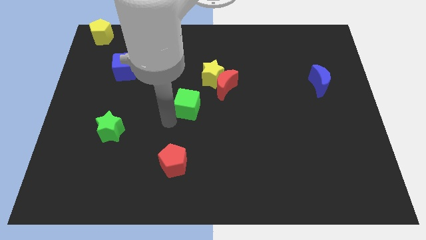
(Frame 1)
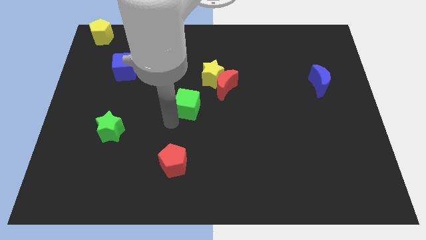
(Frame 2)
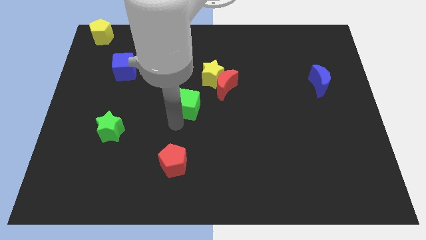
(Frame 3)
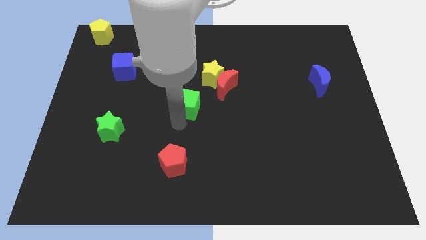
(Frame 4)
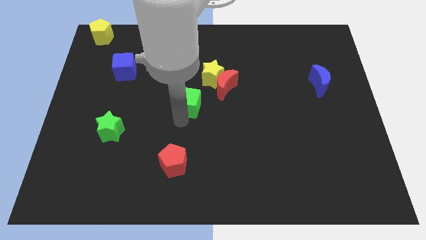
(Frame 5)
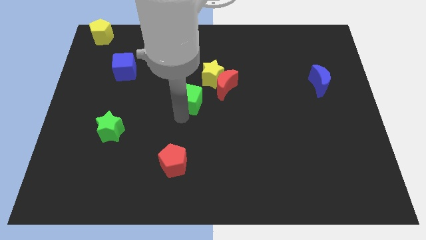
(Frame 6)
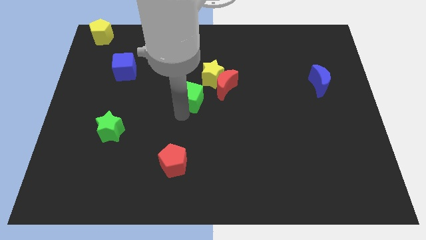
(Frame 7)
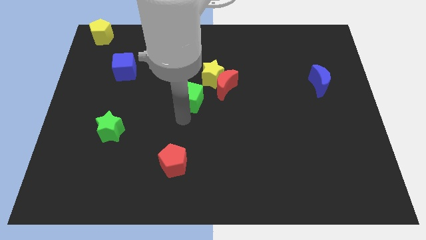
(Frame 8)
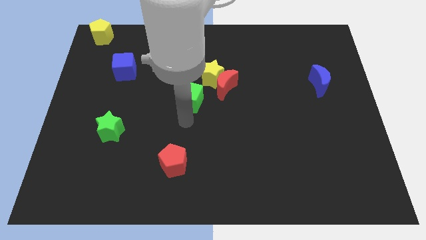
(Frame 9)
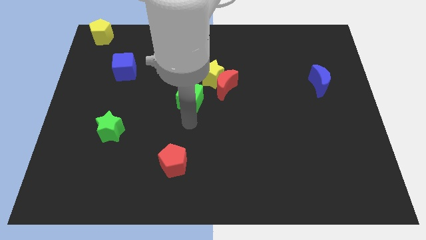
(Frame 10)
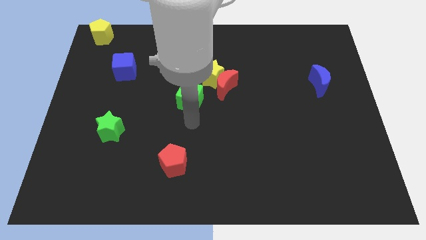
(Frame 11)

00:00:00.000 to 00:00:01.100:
move the green cube to the center of the board

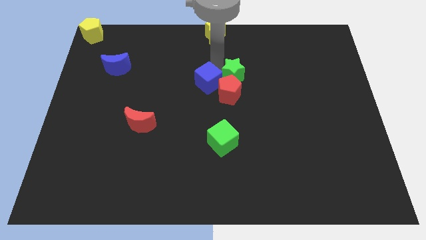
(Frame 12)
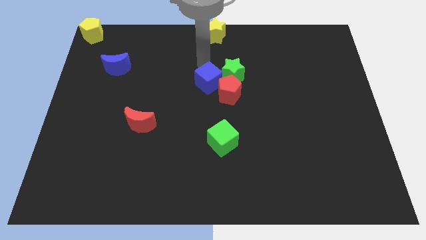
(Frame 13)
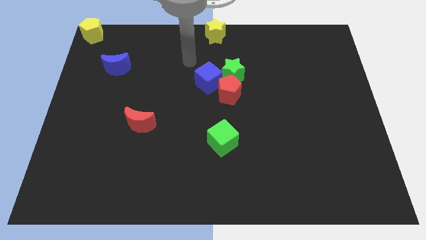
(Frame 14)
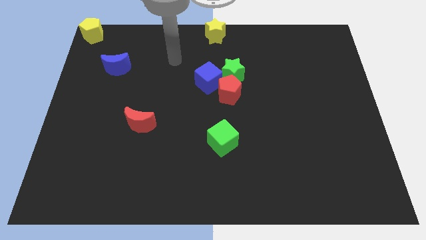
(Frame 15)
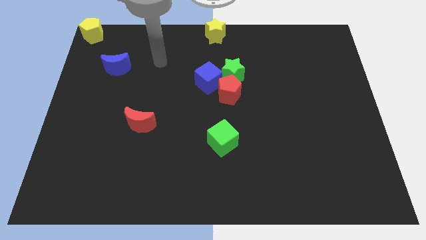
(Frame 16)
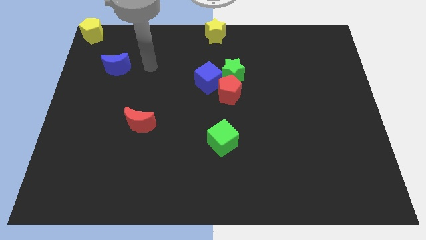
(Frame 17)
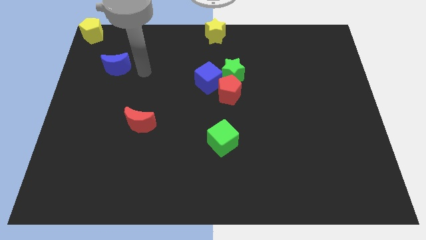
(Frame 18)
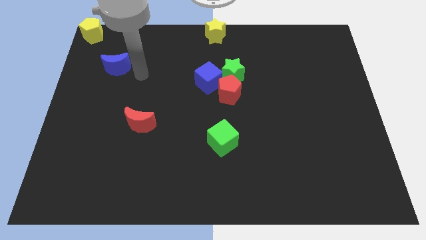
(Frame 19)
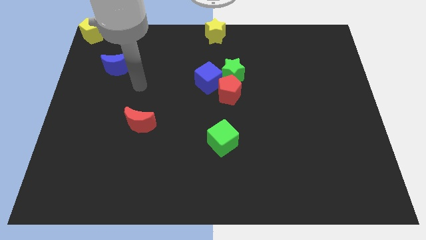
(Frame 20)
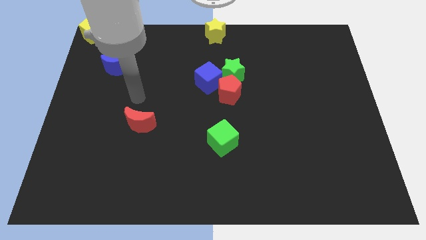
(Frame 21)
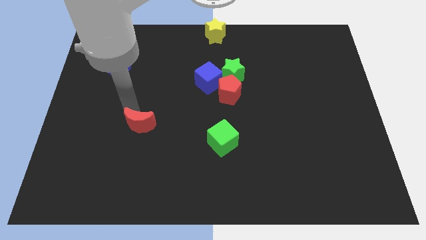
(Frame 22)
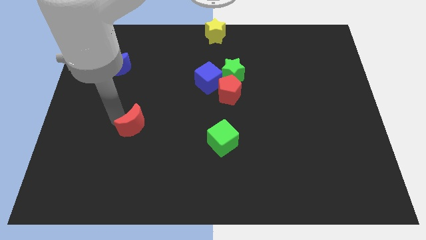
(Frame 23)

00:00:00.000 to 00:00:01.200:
place arm near red crescent

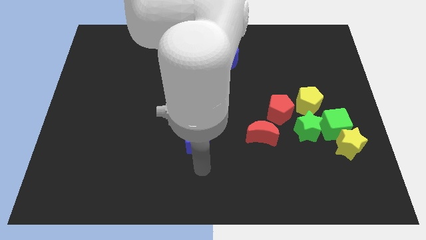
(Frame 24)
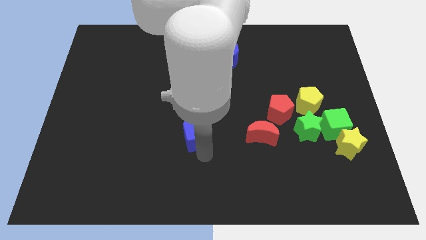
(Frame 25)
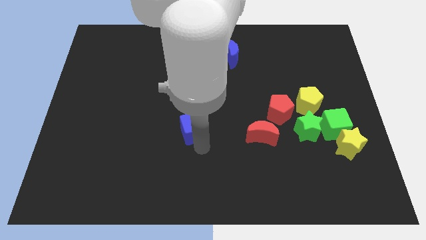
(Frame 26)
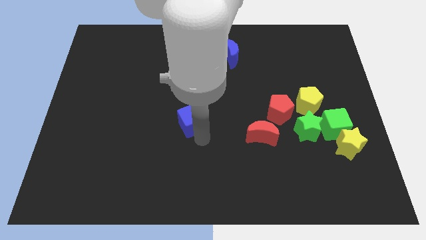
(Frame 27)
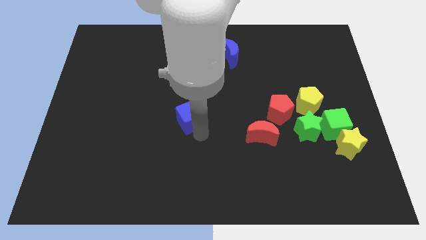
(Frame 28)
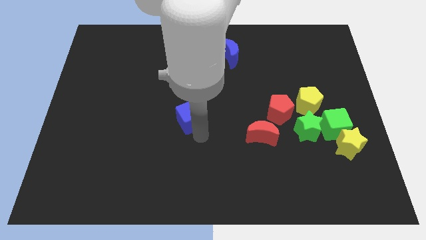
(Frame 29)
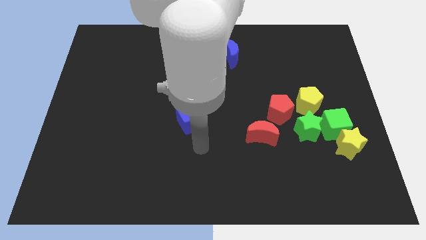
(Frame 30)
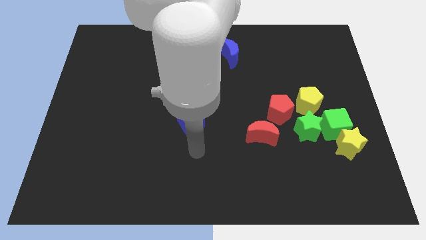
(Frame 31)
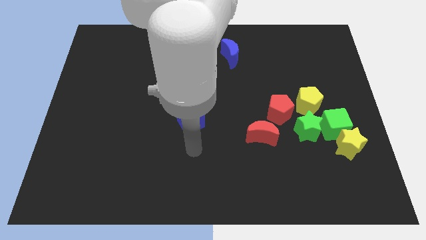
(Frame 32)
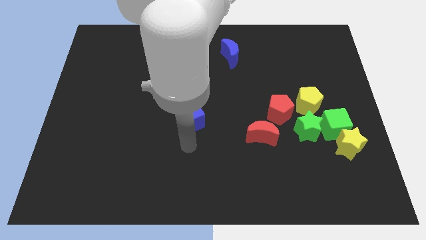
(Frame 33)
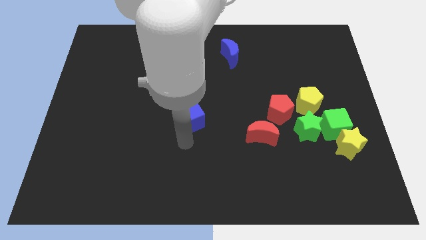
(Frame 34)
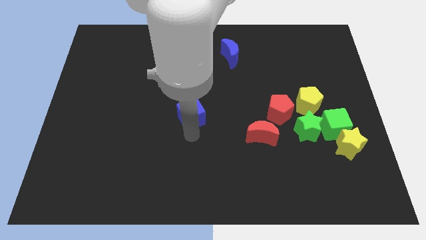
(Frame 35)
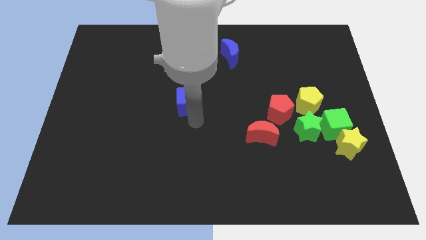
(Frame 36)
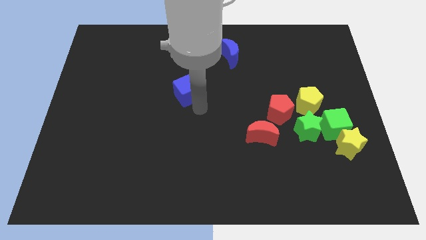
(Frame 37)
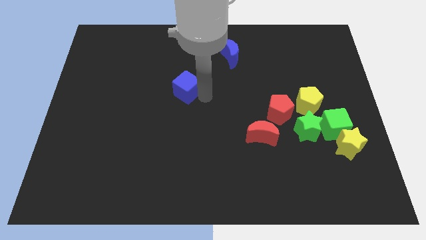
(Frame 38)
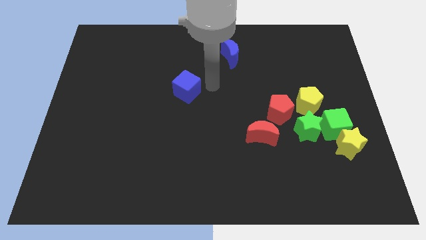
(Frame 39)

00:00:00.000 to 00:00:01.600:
place the blue cube diagonal to the blue moon

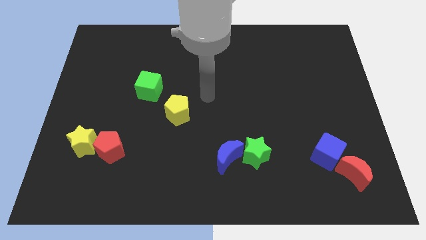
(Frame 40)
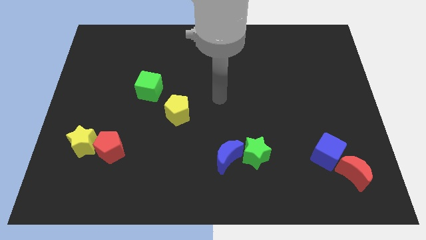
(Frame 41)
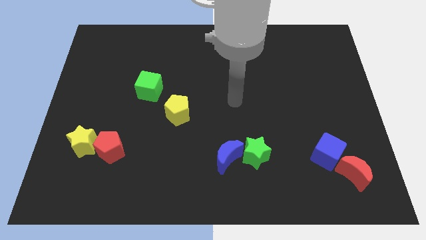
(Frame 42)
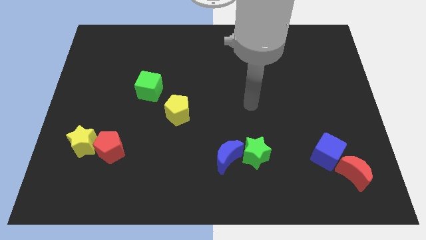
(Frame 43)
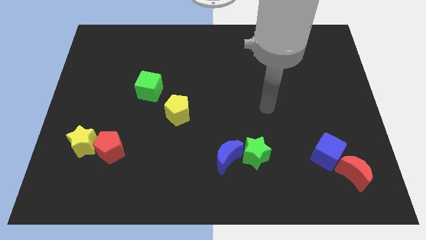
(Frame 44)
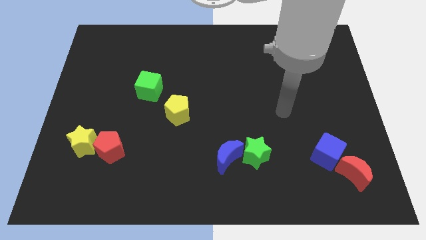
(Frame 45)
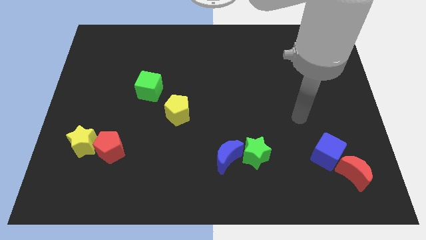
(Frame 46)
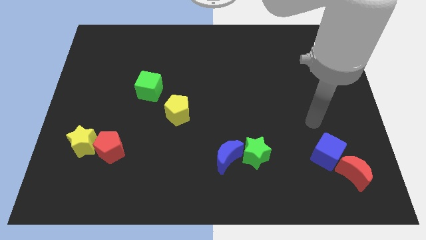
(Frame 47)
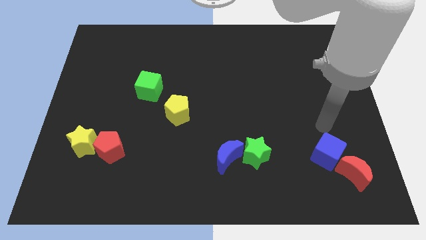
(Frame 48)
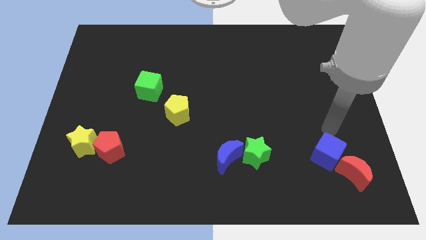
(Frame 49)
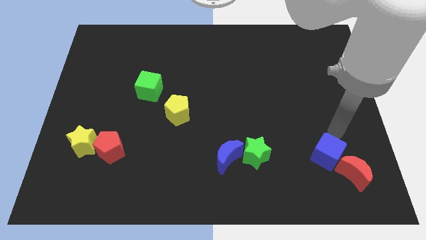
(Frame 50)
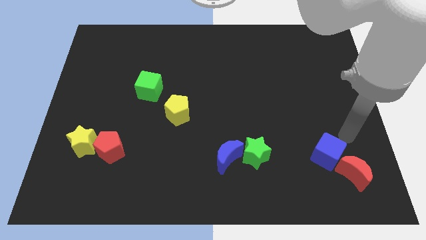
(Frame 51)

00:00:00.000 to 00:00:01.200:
point your arm close to blue cube

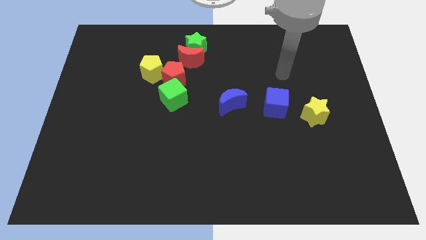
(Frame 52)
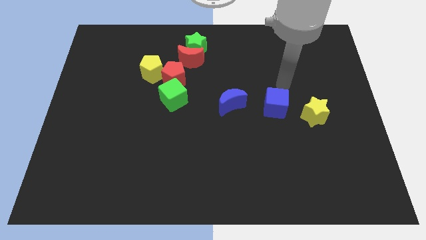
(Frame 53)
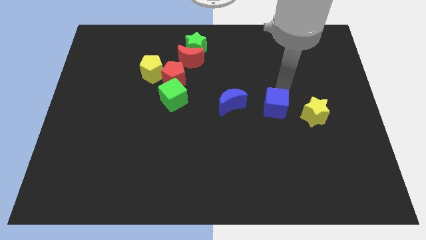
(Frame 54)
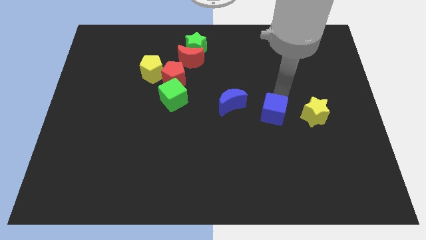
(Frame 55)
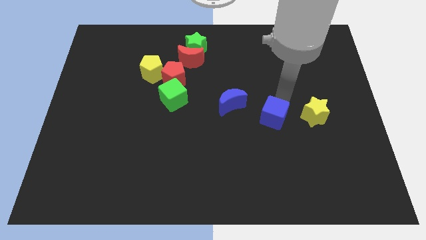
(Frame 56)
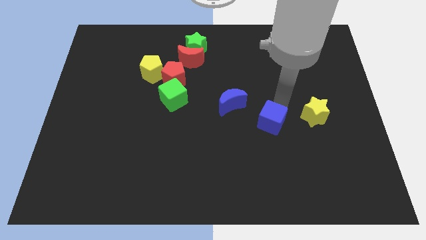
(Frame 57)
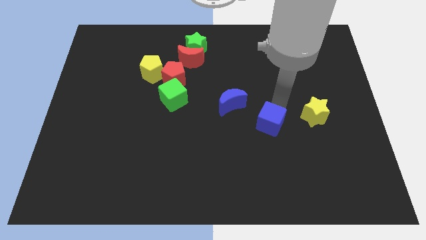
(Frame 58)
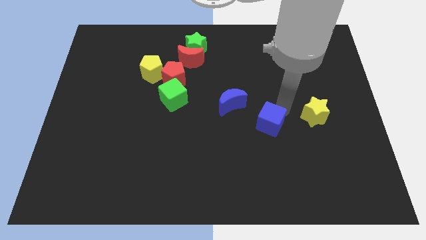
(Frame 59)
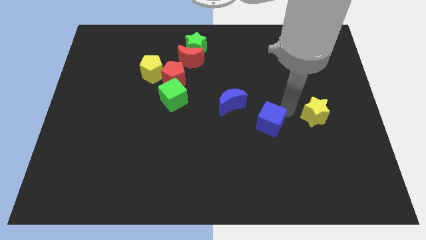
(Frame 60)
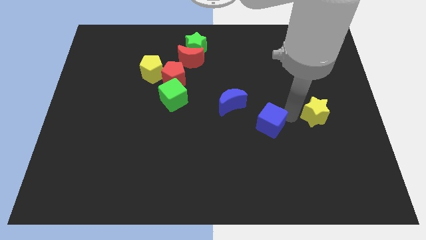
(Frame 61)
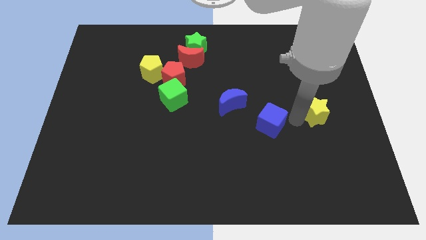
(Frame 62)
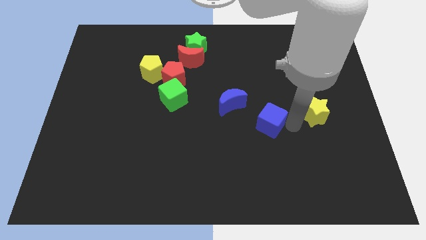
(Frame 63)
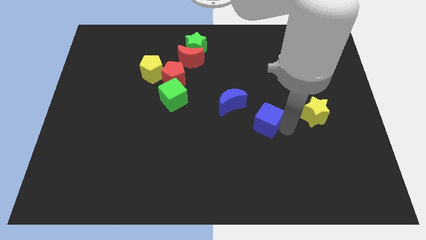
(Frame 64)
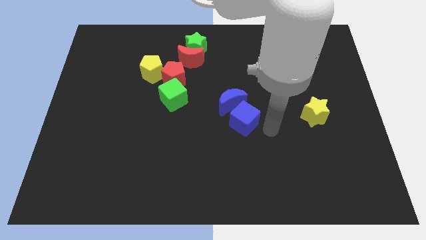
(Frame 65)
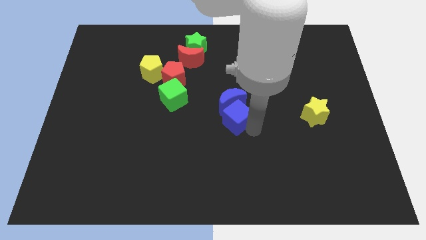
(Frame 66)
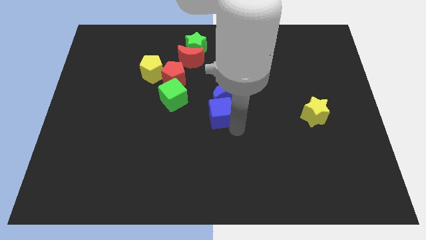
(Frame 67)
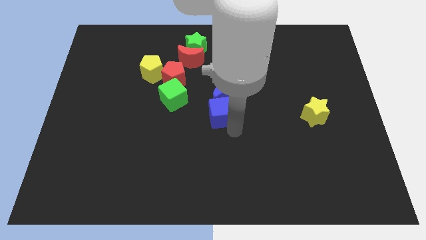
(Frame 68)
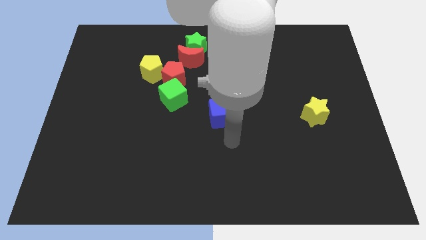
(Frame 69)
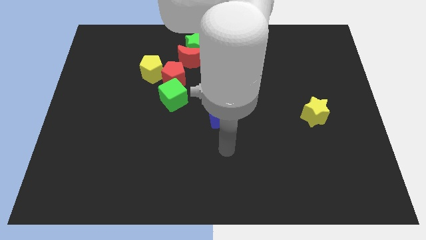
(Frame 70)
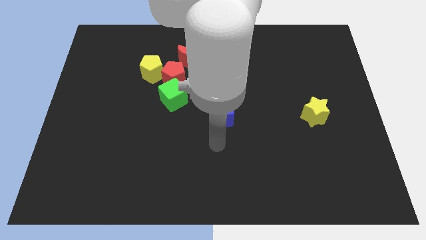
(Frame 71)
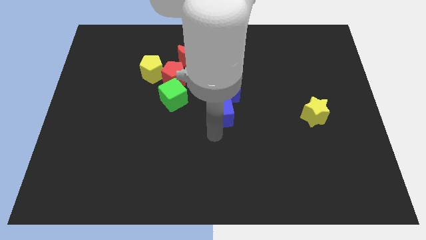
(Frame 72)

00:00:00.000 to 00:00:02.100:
move the blue cube to the center of the board

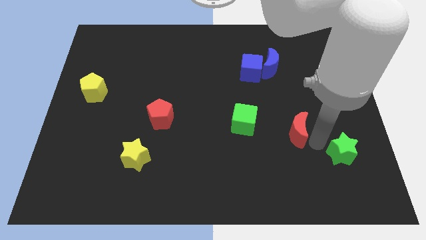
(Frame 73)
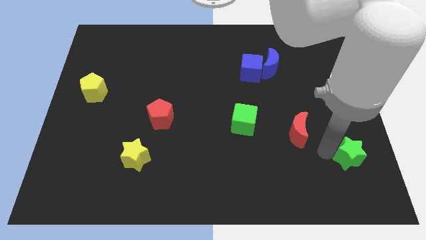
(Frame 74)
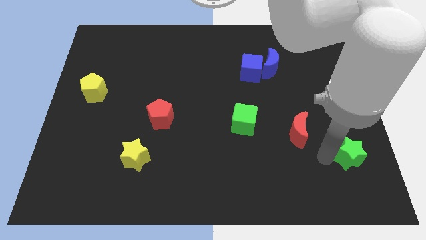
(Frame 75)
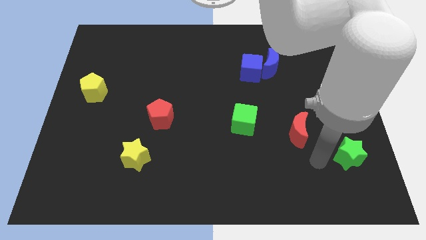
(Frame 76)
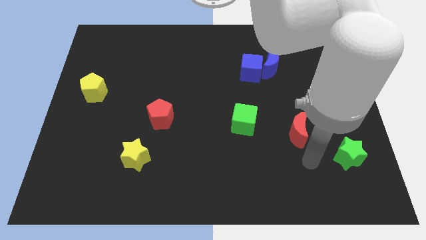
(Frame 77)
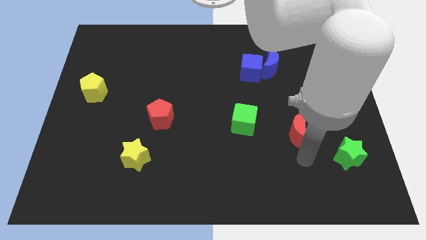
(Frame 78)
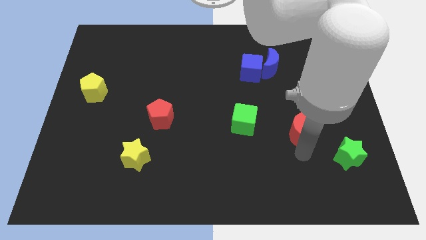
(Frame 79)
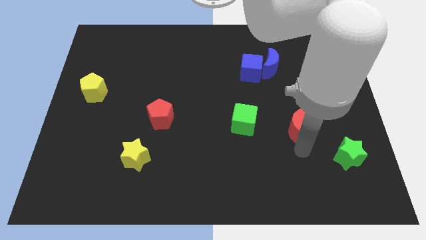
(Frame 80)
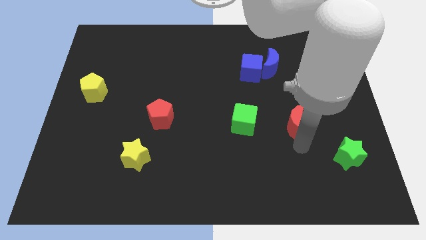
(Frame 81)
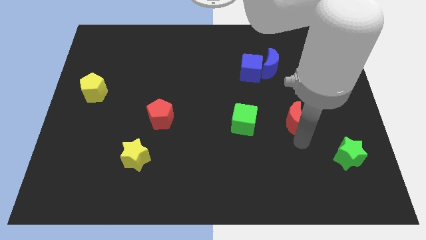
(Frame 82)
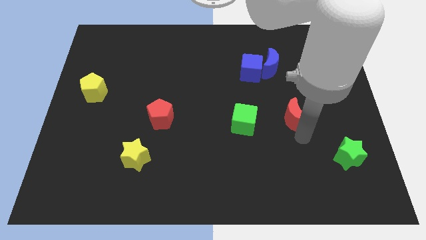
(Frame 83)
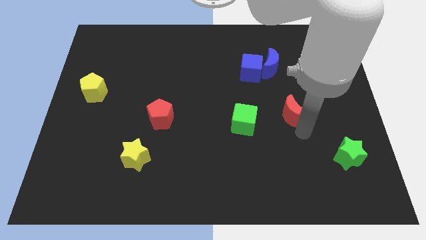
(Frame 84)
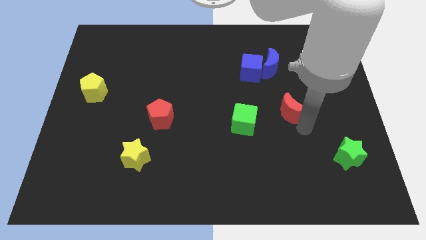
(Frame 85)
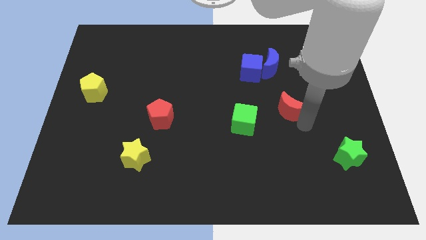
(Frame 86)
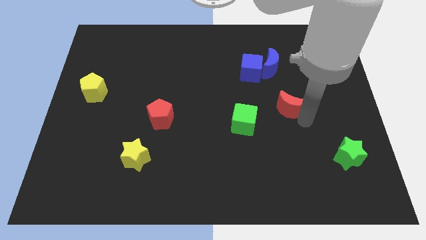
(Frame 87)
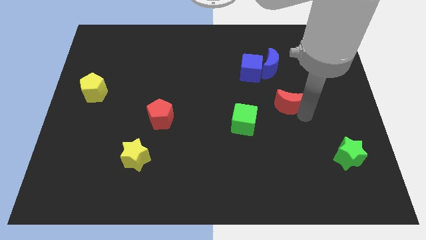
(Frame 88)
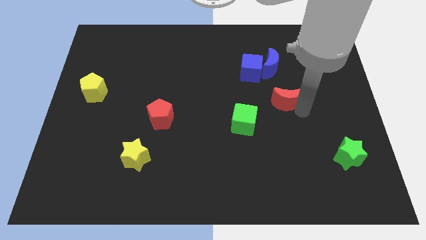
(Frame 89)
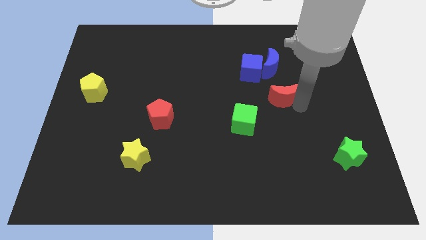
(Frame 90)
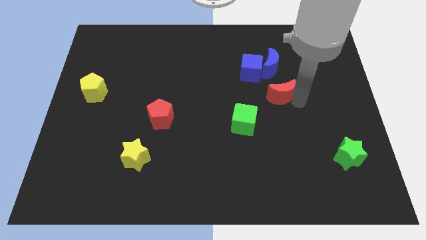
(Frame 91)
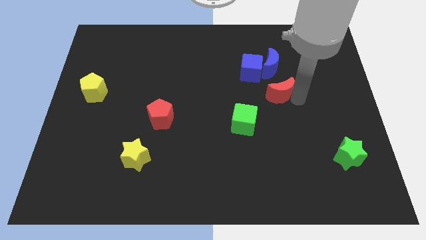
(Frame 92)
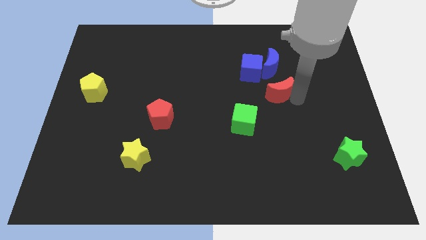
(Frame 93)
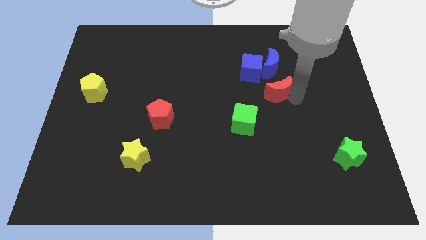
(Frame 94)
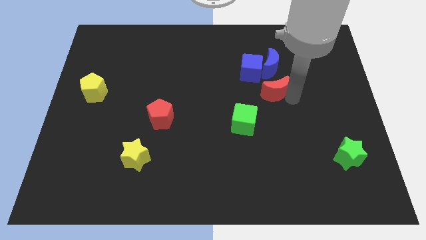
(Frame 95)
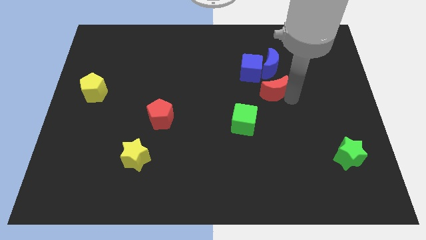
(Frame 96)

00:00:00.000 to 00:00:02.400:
rotate the red moon
